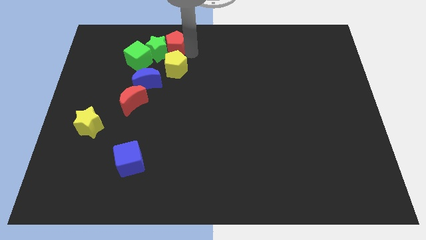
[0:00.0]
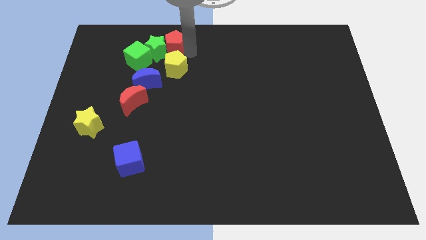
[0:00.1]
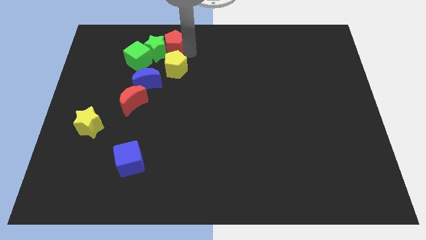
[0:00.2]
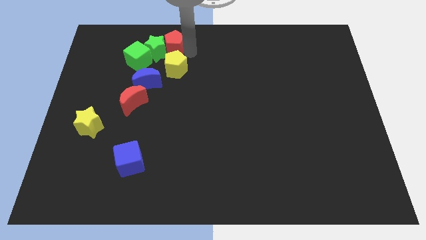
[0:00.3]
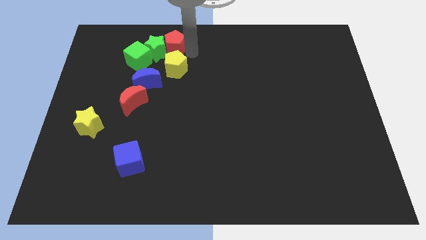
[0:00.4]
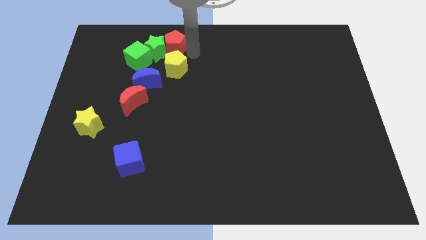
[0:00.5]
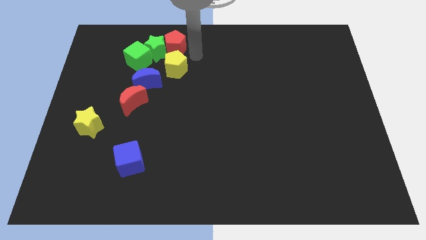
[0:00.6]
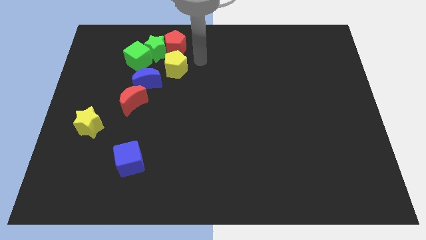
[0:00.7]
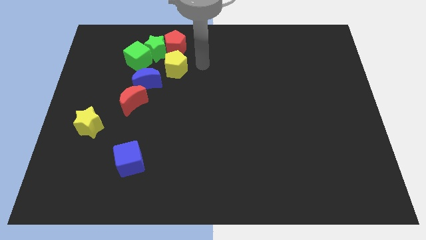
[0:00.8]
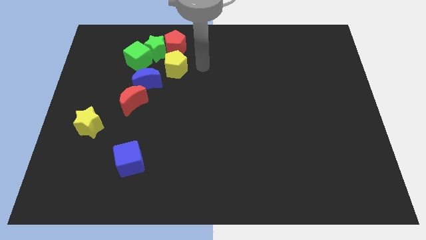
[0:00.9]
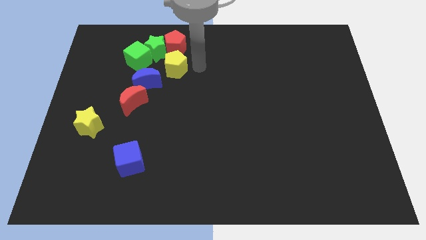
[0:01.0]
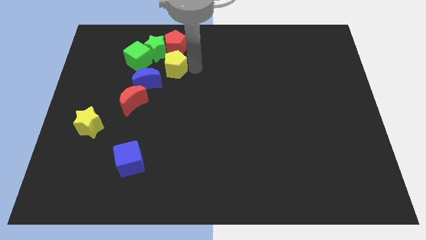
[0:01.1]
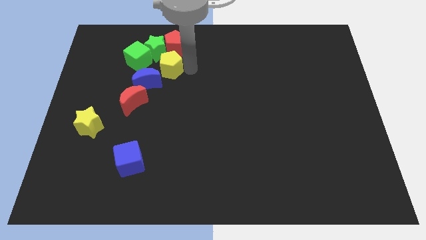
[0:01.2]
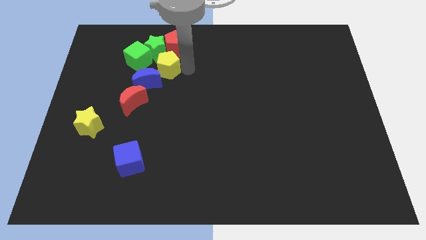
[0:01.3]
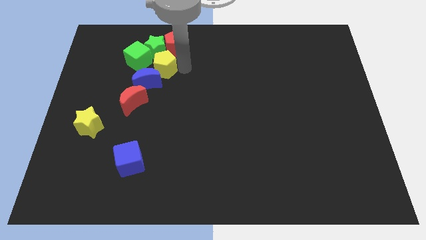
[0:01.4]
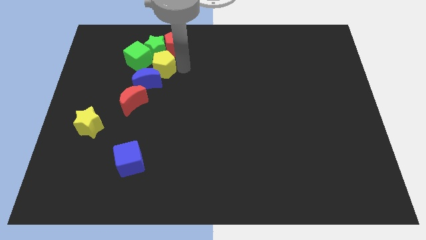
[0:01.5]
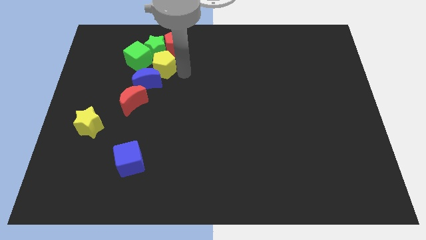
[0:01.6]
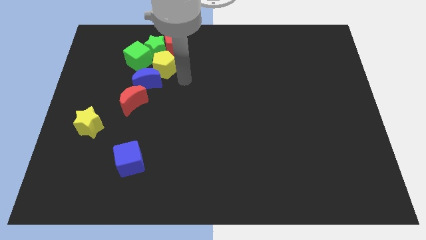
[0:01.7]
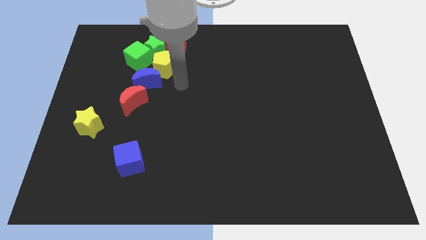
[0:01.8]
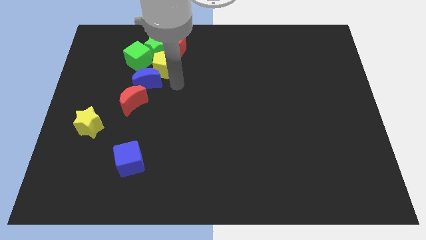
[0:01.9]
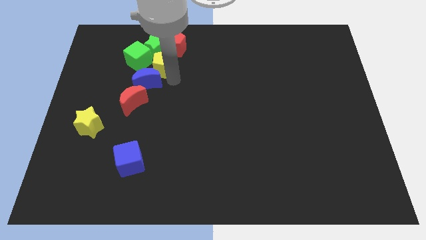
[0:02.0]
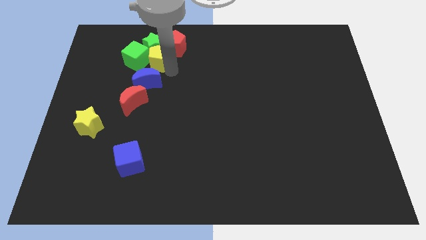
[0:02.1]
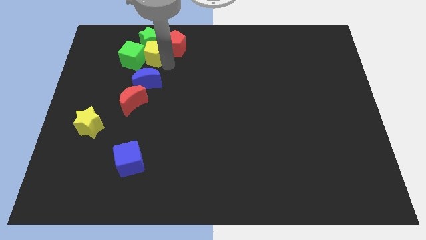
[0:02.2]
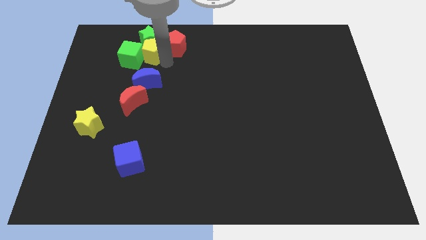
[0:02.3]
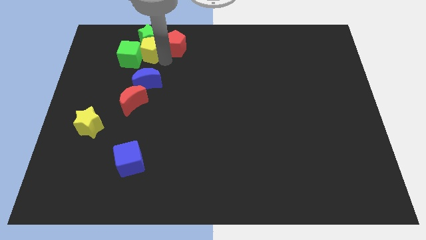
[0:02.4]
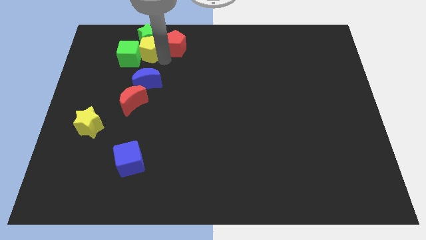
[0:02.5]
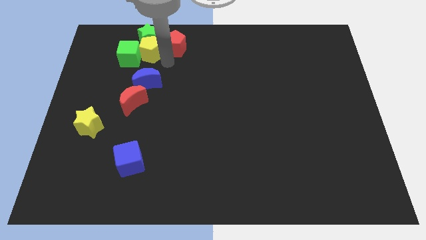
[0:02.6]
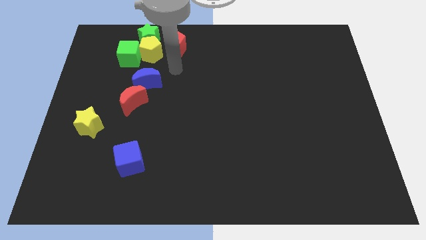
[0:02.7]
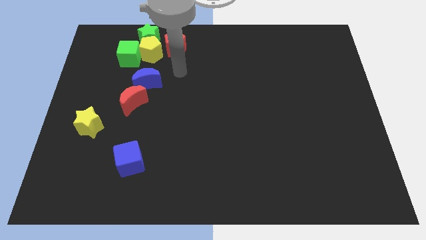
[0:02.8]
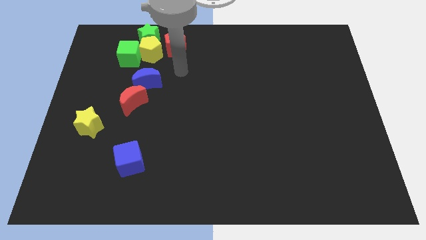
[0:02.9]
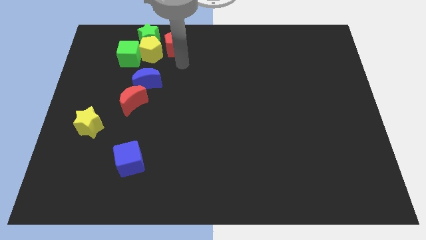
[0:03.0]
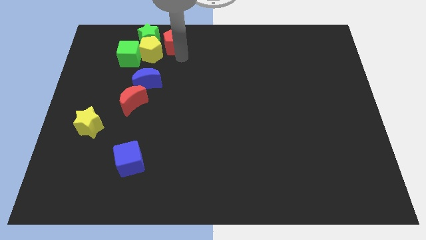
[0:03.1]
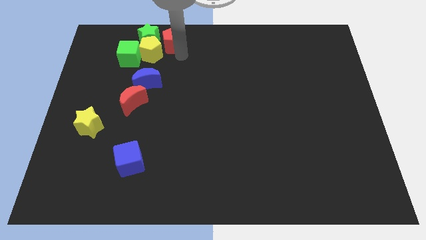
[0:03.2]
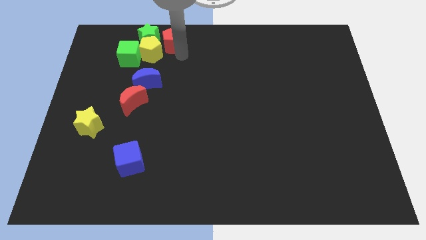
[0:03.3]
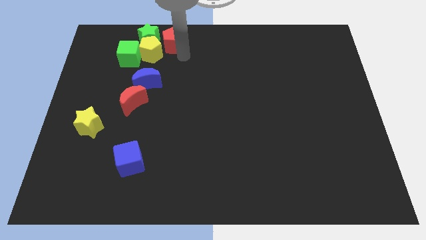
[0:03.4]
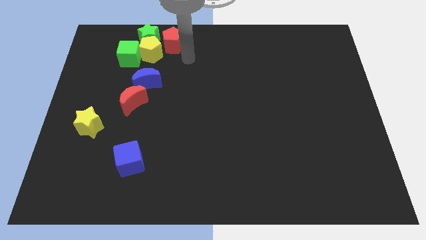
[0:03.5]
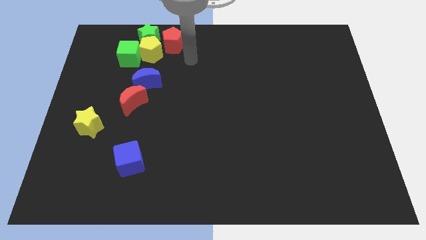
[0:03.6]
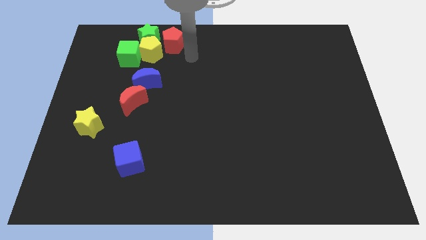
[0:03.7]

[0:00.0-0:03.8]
place the yellow pentagon below to the green star

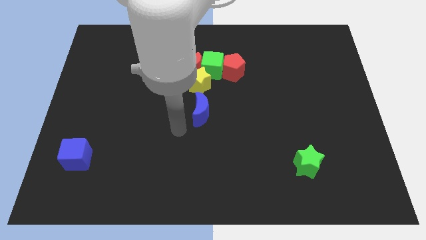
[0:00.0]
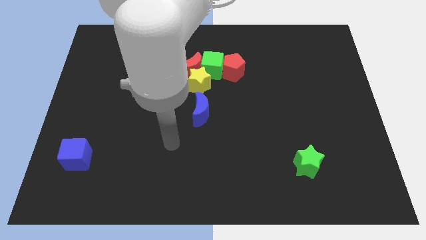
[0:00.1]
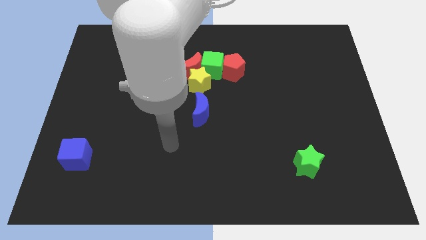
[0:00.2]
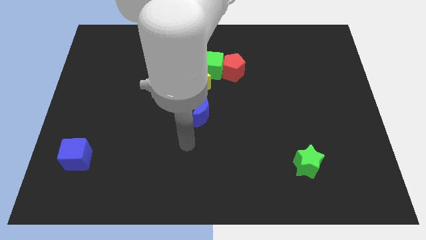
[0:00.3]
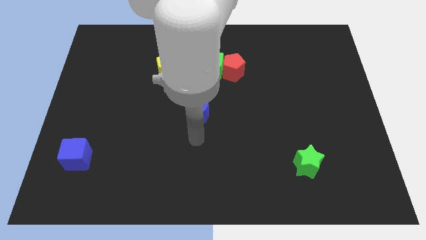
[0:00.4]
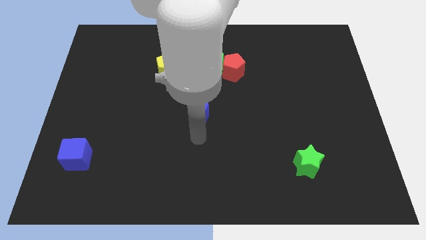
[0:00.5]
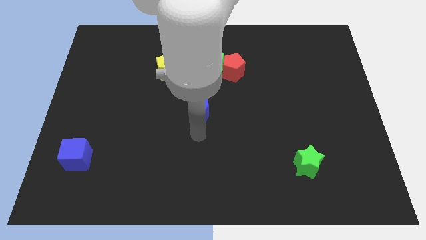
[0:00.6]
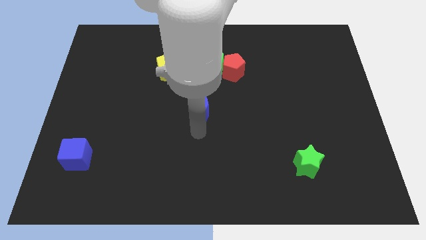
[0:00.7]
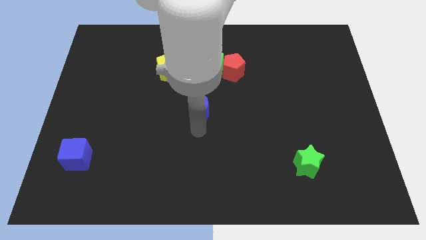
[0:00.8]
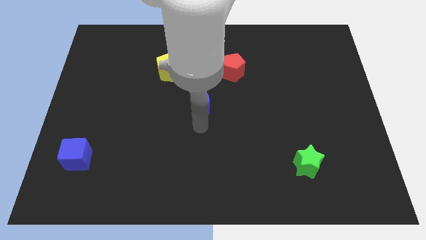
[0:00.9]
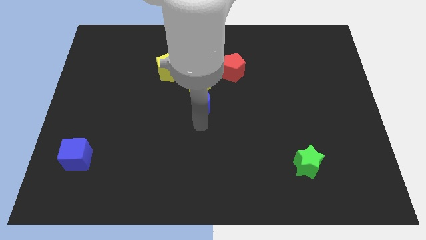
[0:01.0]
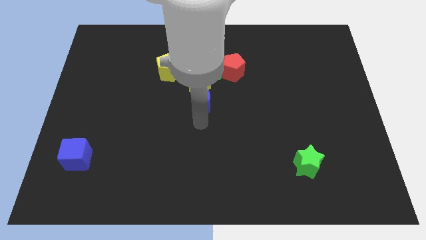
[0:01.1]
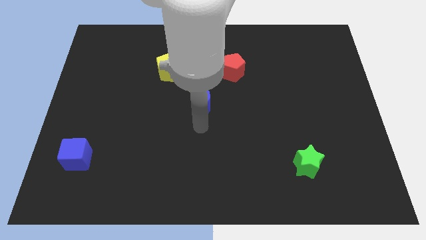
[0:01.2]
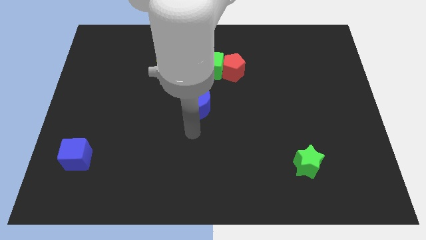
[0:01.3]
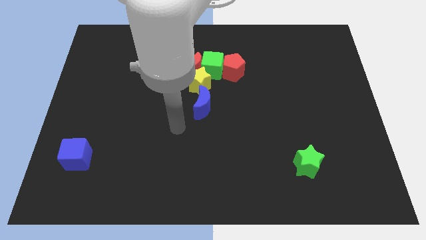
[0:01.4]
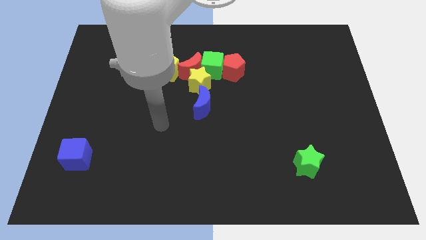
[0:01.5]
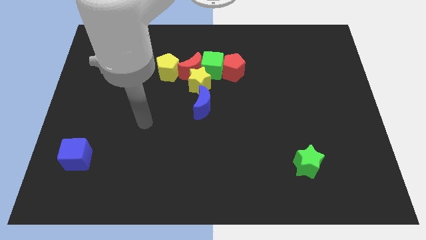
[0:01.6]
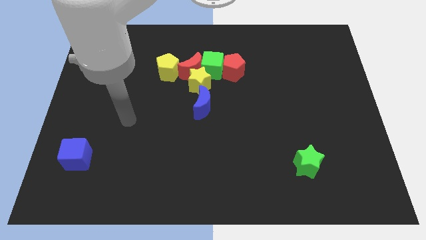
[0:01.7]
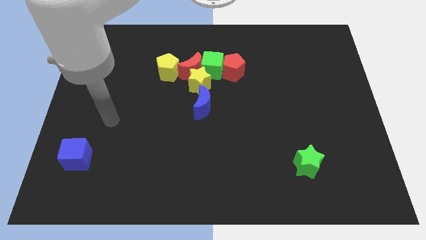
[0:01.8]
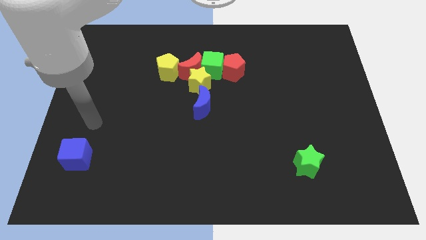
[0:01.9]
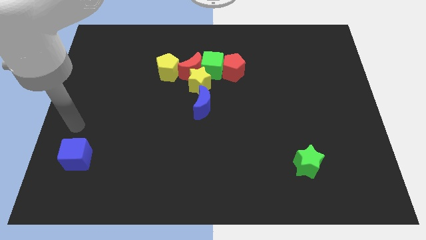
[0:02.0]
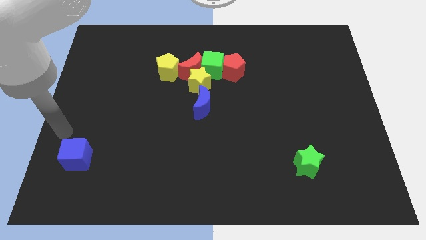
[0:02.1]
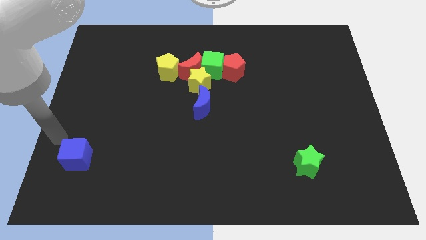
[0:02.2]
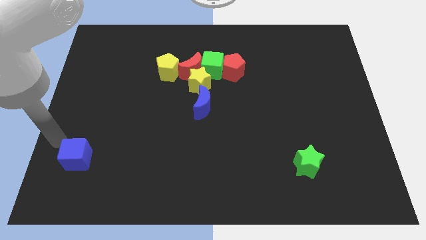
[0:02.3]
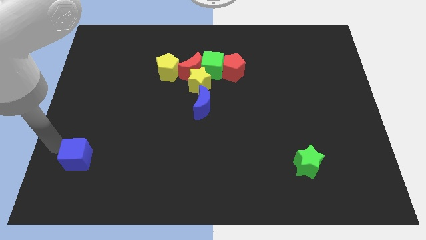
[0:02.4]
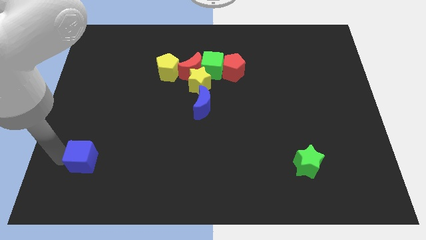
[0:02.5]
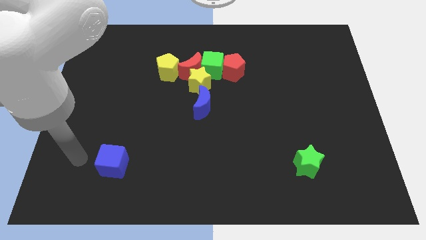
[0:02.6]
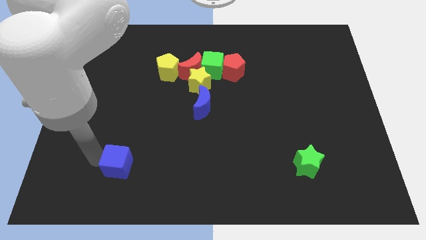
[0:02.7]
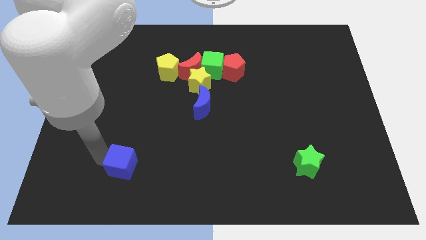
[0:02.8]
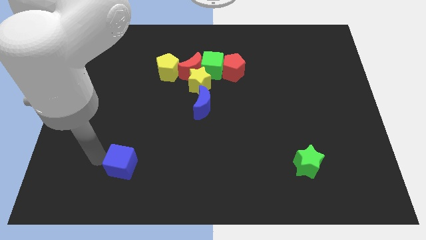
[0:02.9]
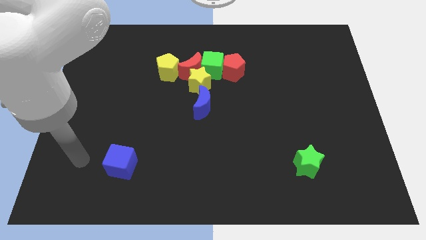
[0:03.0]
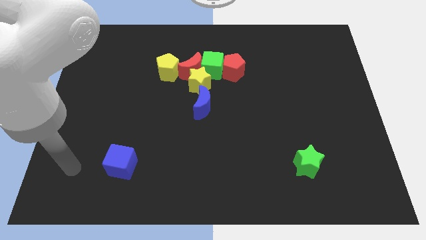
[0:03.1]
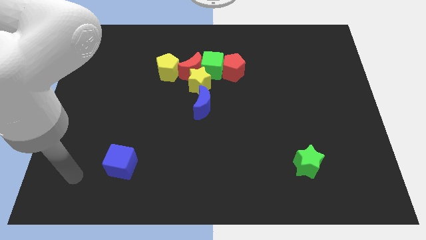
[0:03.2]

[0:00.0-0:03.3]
move the blue cube towards the right side of the table

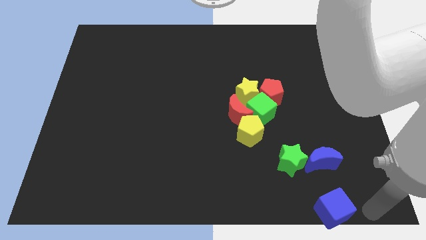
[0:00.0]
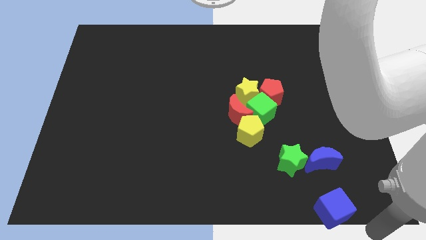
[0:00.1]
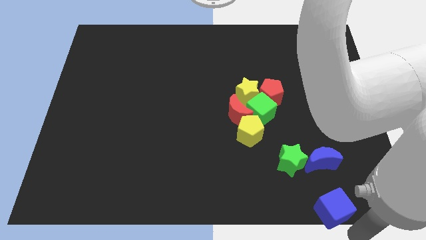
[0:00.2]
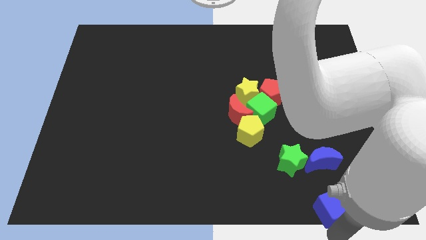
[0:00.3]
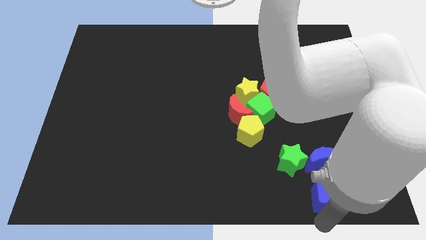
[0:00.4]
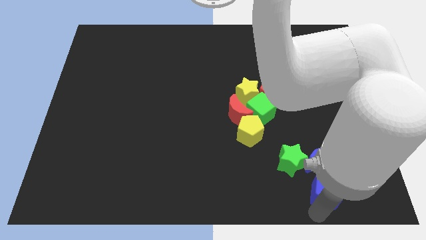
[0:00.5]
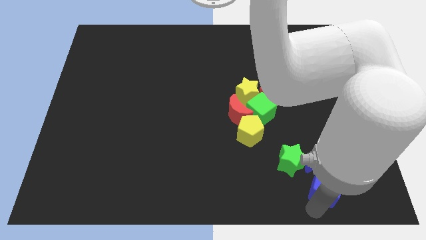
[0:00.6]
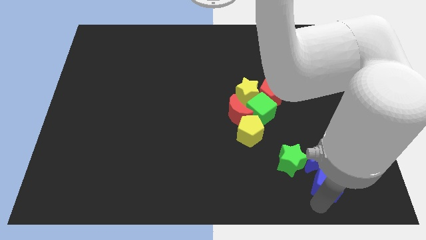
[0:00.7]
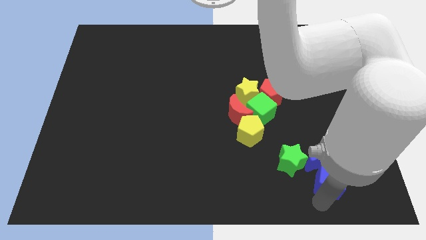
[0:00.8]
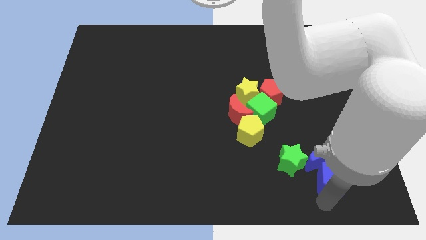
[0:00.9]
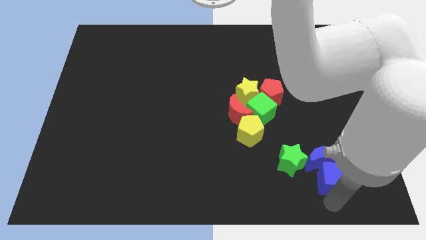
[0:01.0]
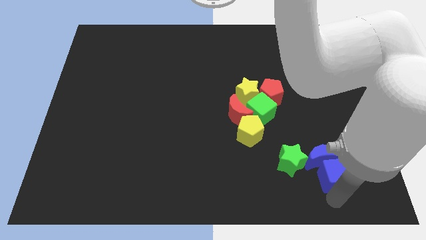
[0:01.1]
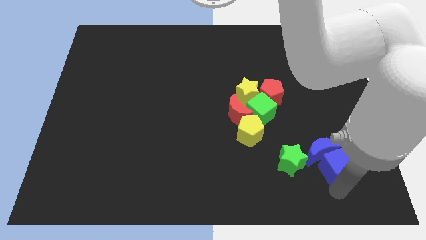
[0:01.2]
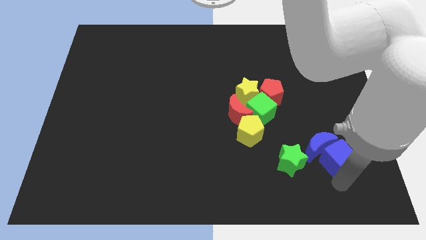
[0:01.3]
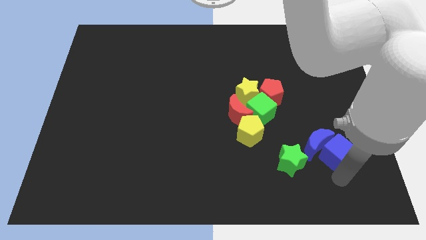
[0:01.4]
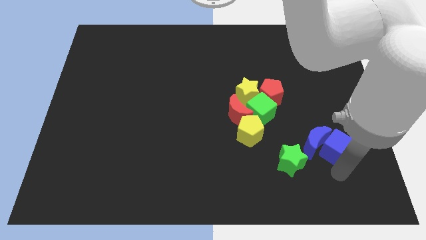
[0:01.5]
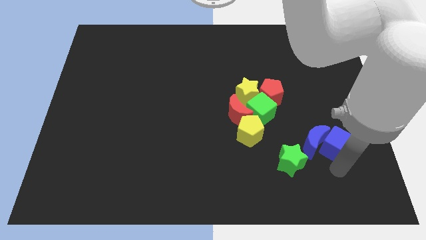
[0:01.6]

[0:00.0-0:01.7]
move blue cube into the blue moon

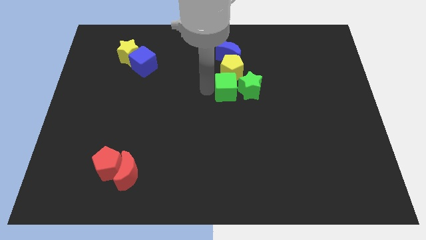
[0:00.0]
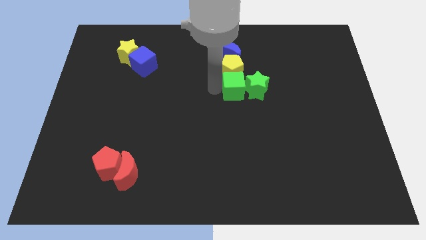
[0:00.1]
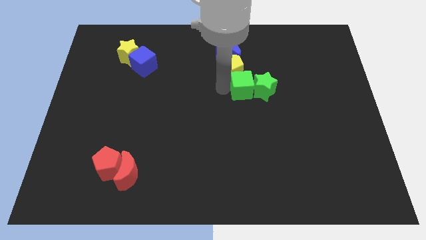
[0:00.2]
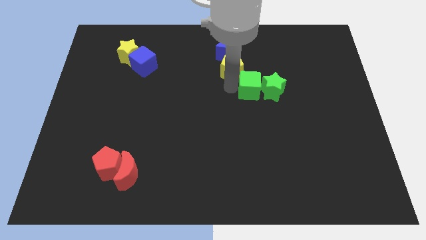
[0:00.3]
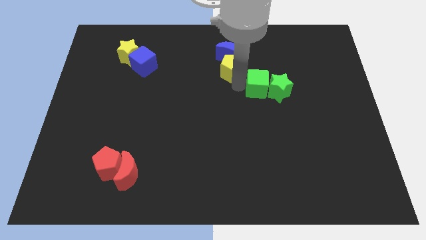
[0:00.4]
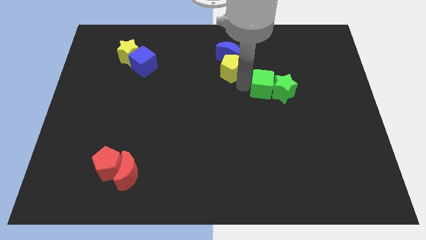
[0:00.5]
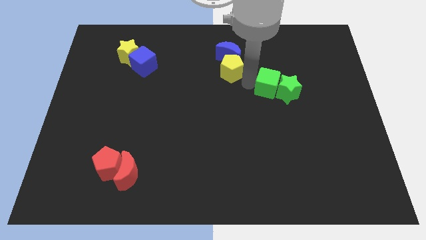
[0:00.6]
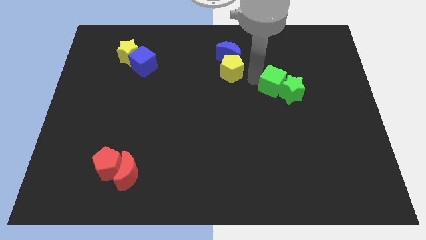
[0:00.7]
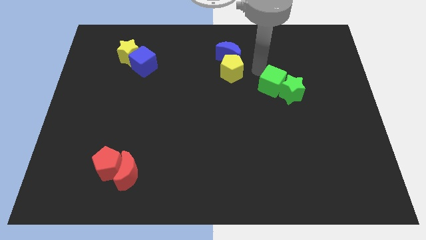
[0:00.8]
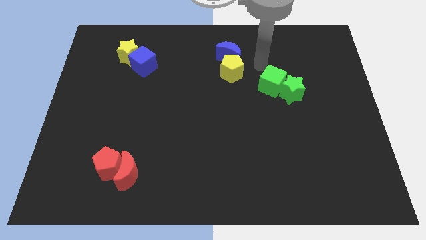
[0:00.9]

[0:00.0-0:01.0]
push the green blocks towards the center right side of the board
